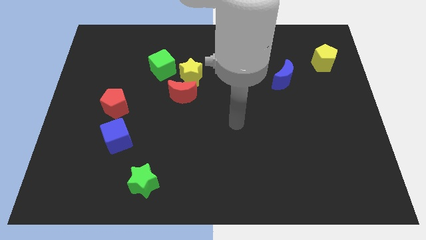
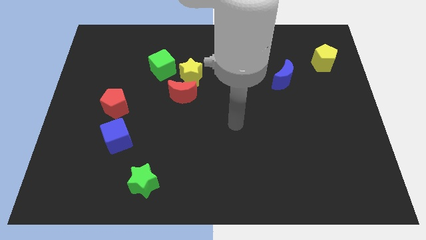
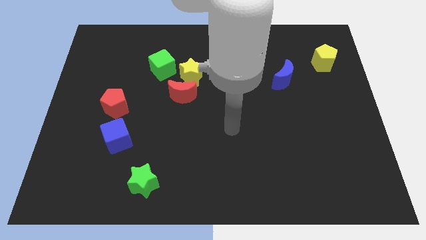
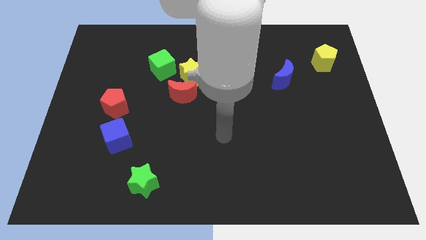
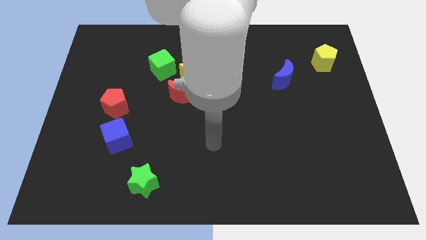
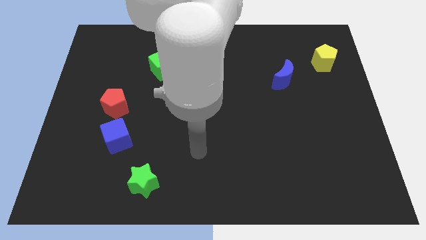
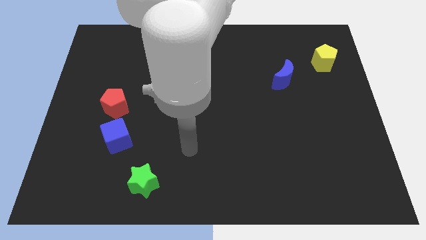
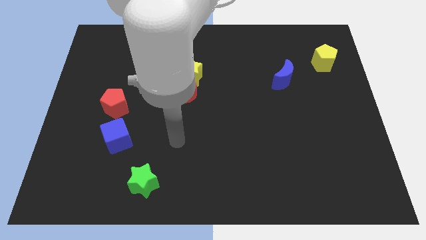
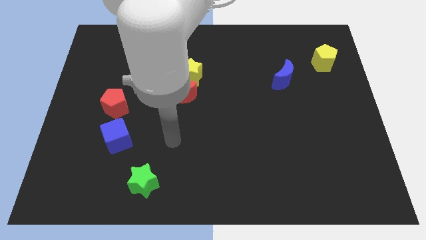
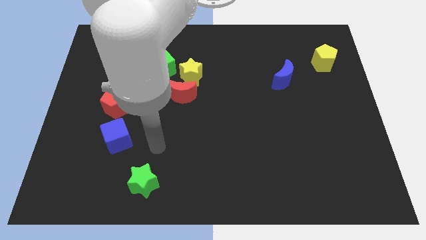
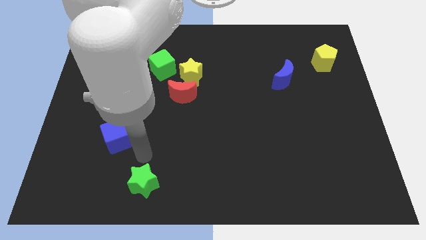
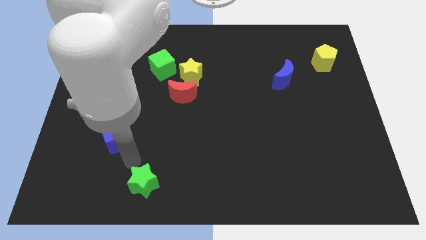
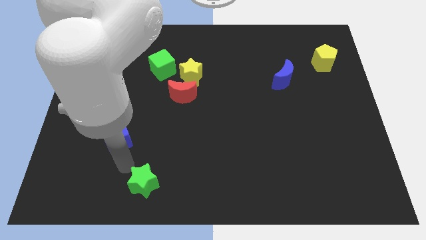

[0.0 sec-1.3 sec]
move your arm in between the blue cube and green star

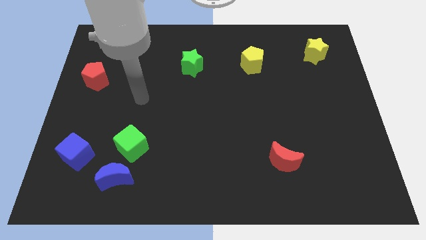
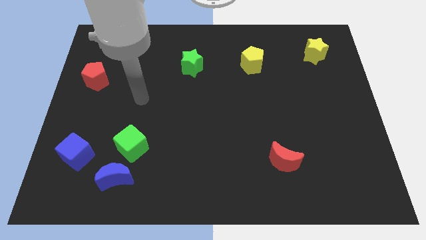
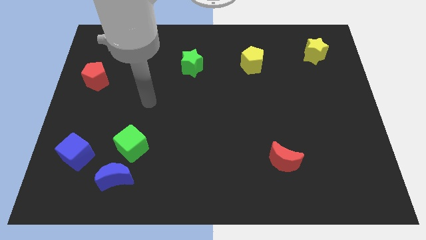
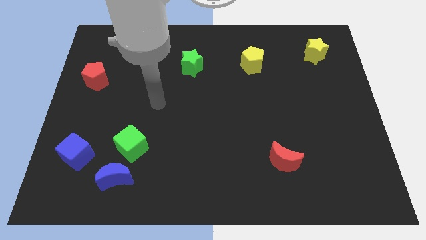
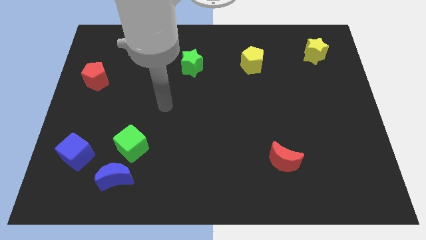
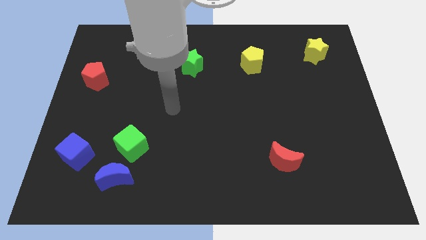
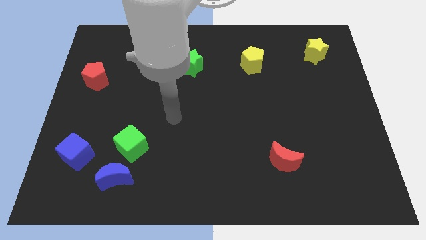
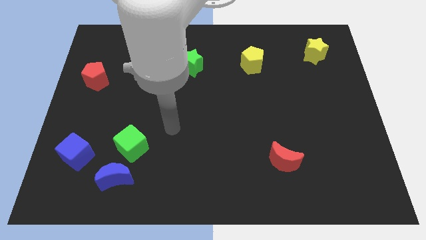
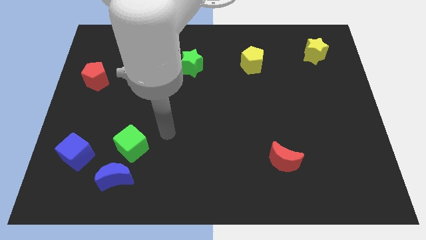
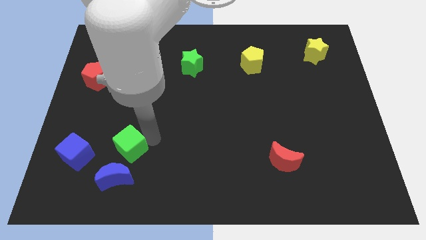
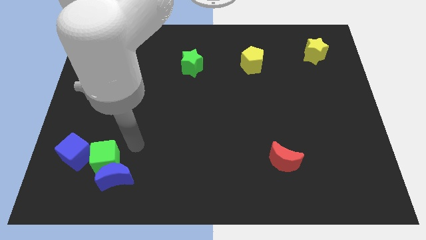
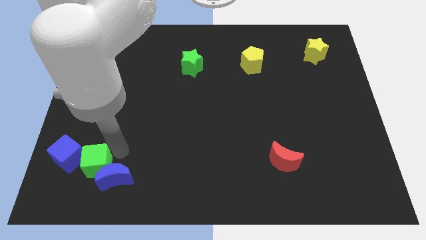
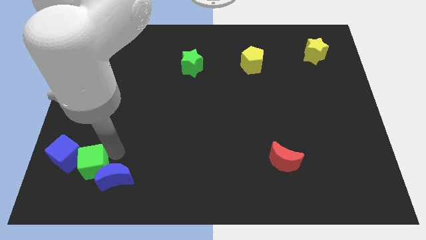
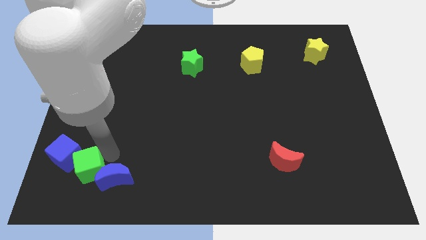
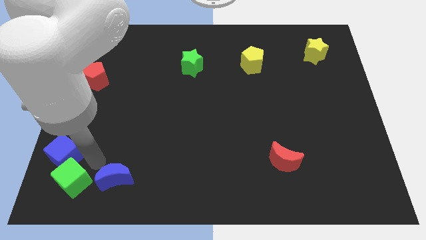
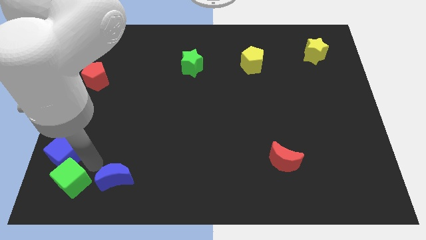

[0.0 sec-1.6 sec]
push the green cube to the left of the blue crescent

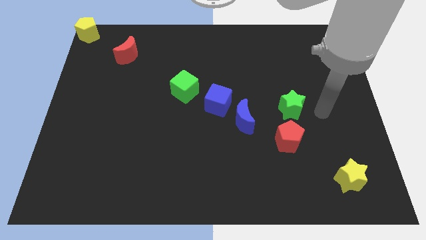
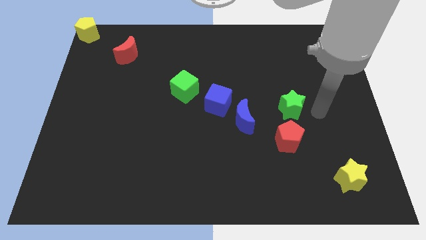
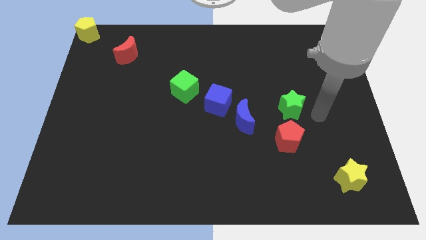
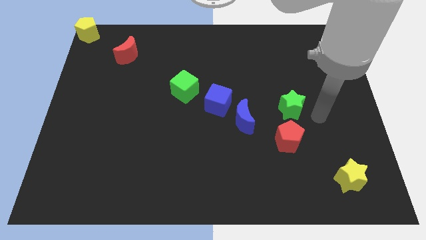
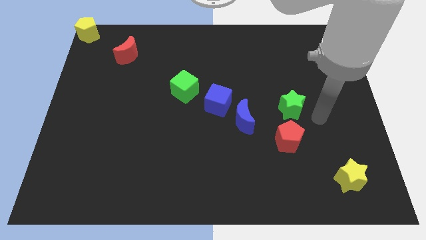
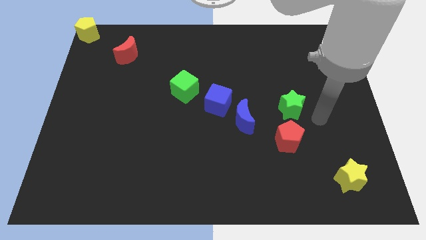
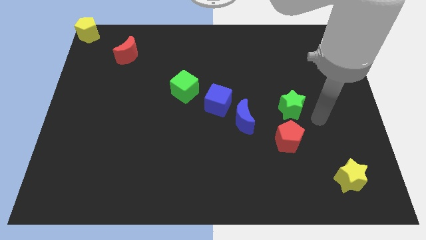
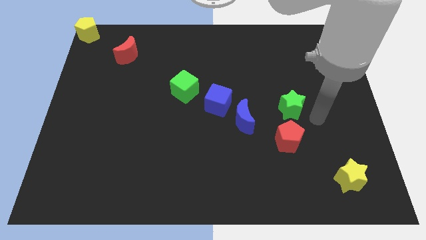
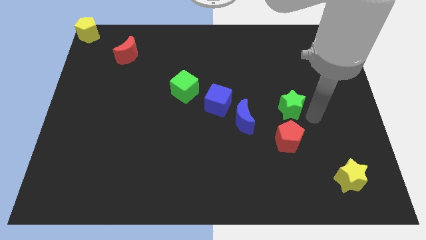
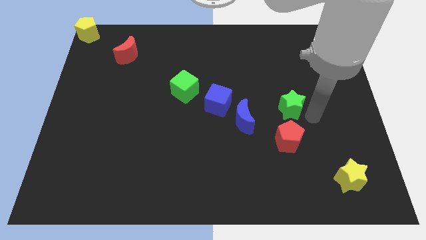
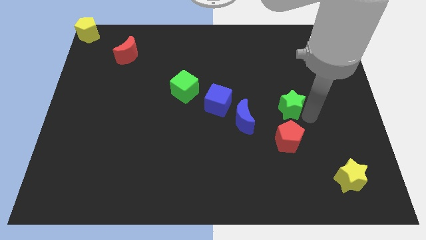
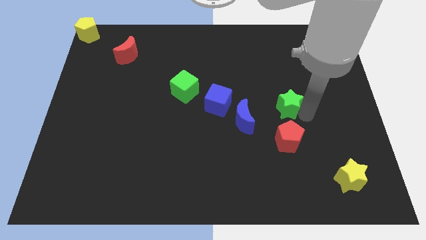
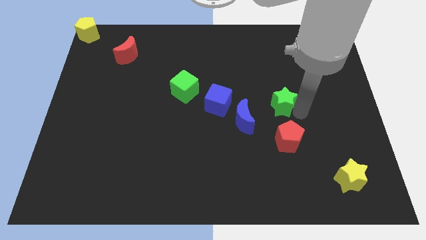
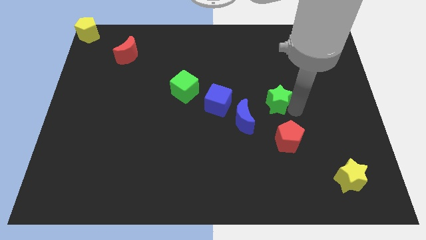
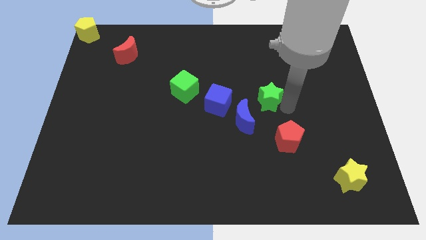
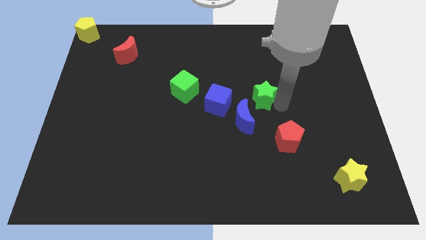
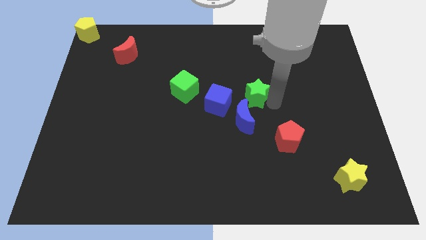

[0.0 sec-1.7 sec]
push the green star diagonally top left to the red pentagon

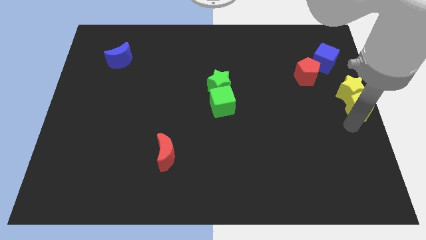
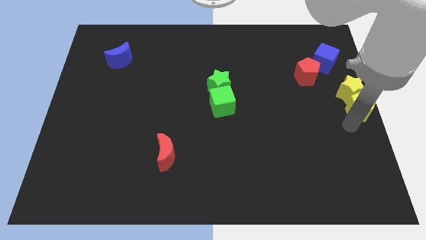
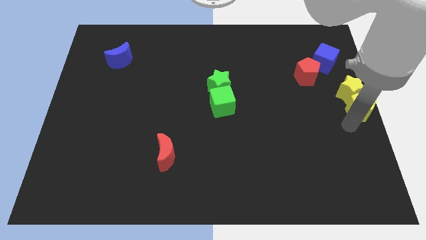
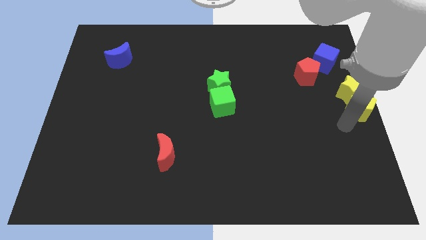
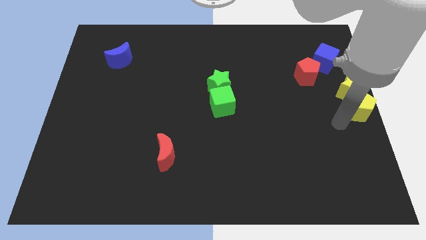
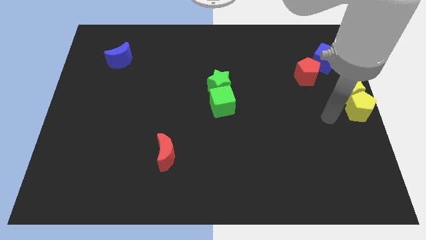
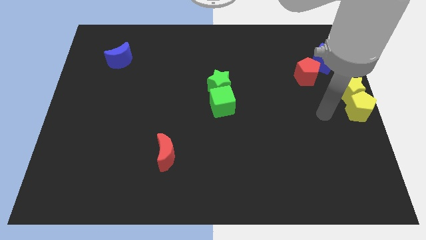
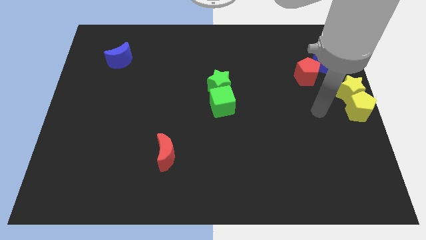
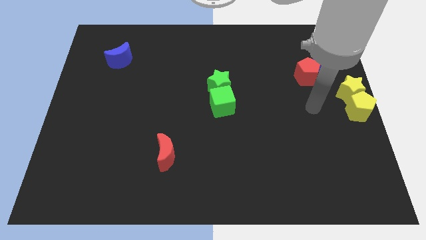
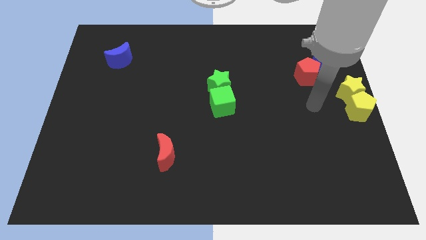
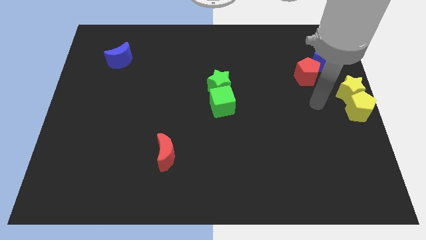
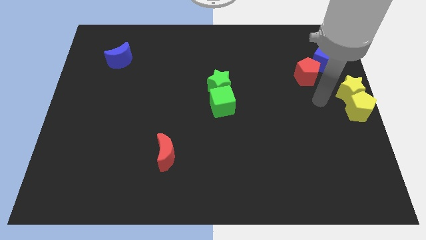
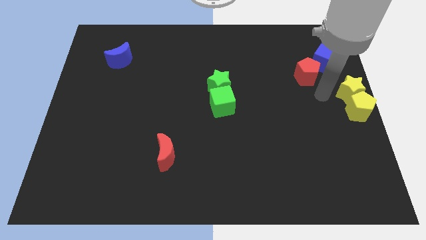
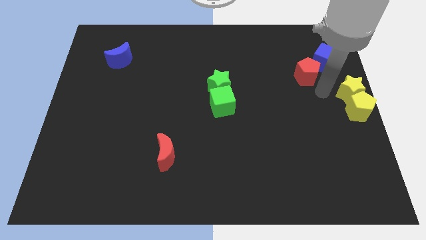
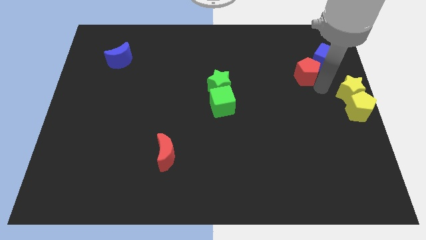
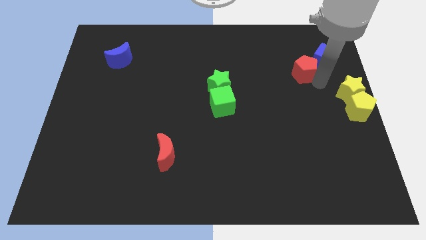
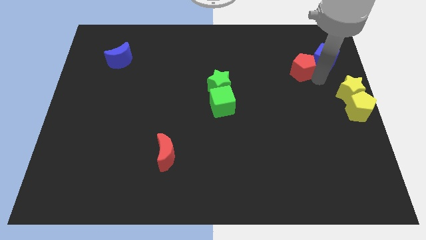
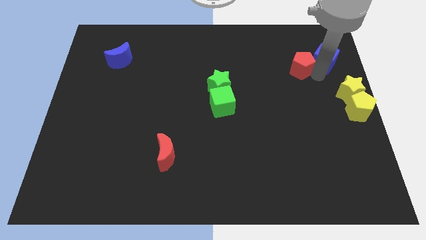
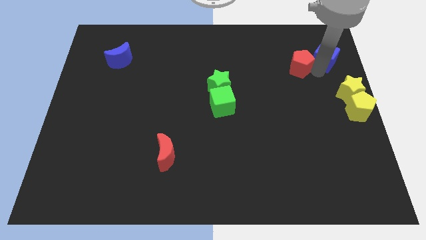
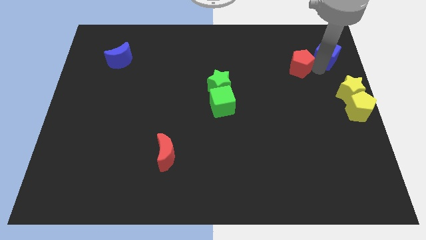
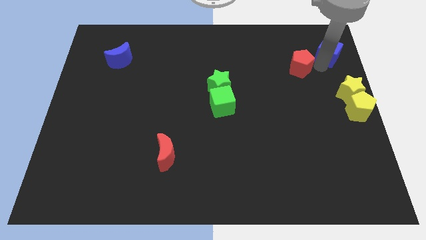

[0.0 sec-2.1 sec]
place your arm in between the red pentagon and blue cube

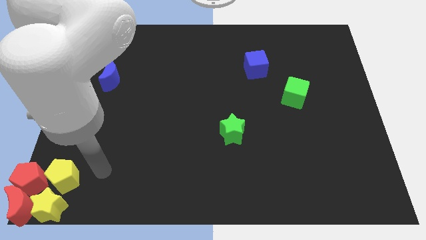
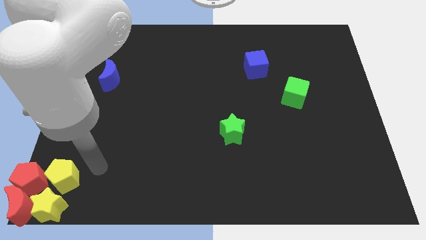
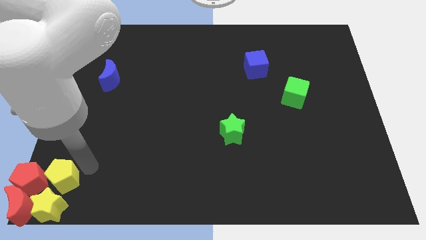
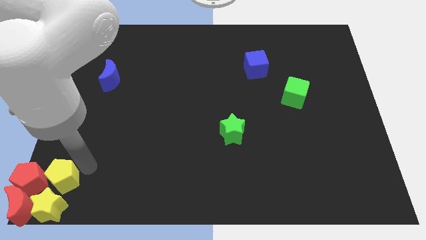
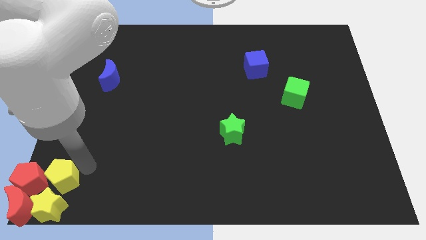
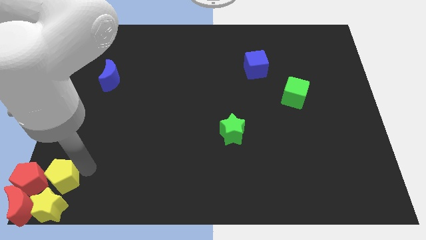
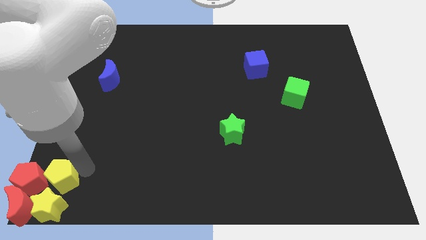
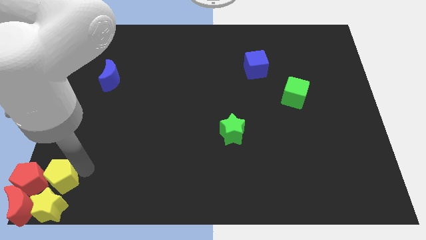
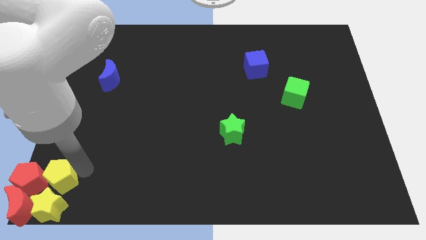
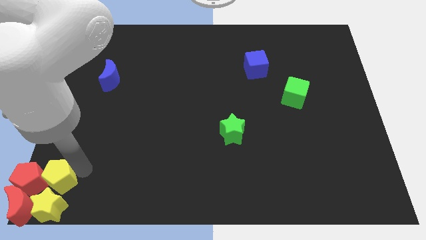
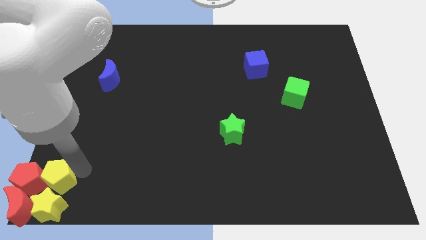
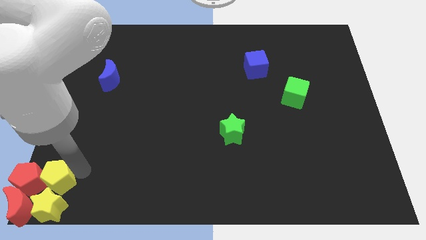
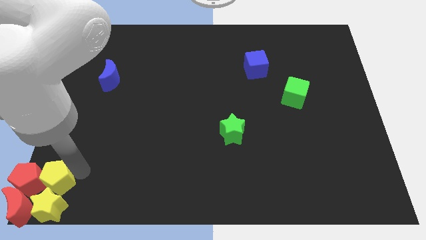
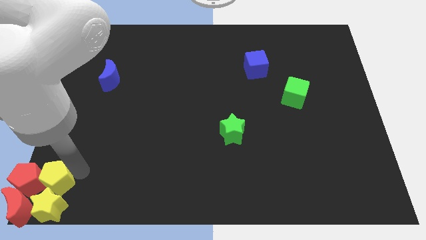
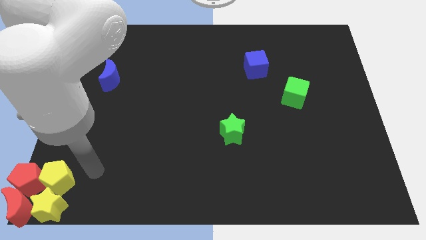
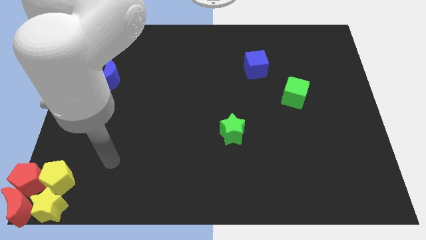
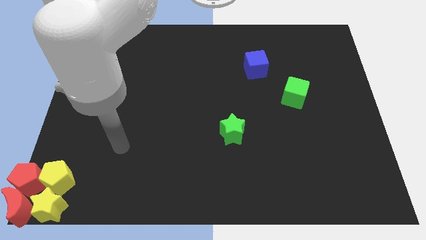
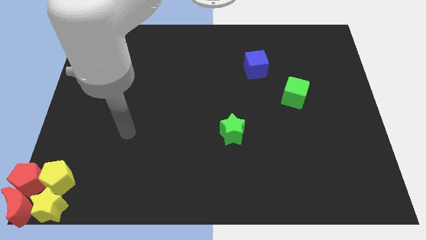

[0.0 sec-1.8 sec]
move the yellow pentagon at the top side of the yellow star

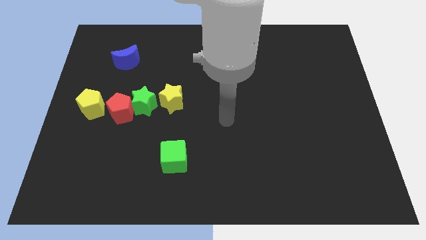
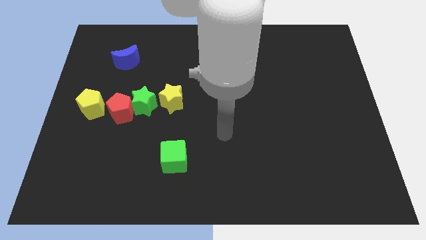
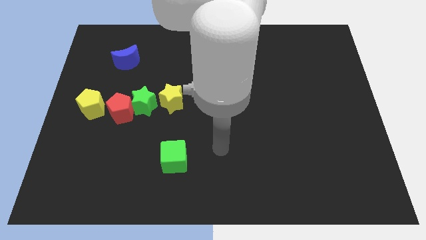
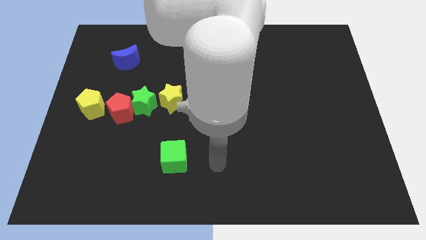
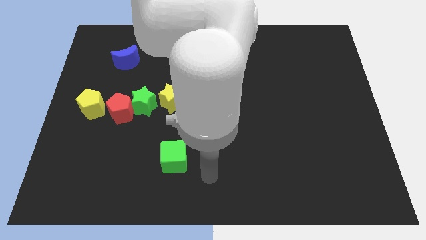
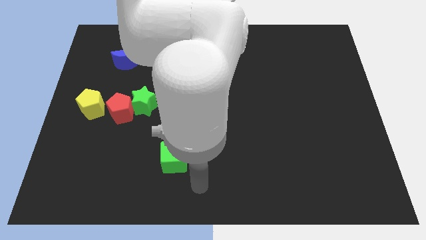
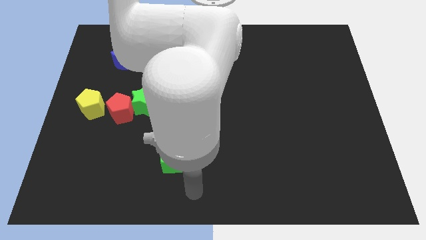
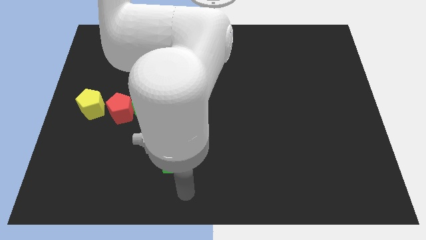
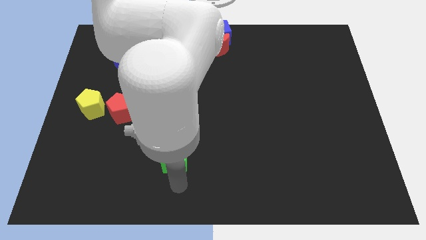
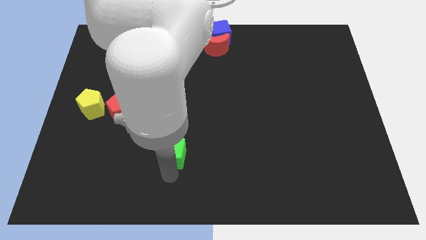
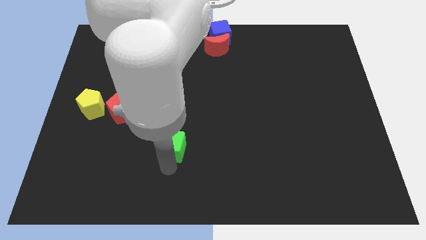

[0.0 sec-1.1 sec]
touch the bottom of green cube
